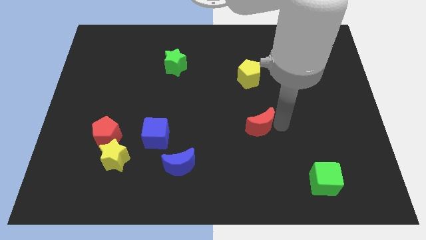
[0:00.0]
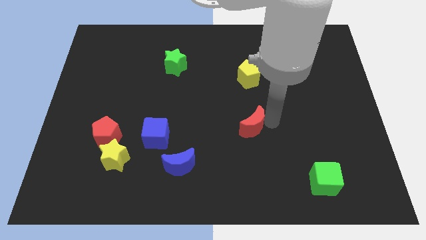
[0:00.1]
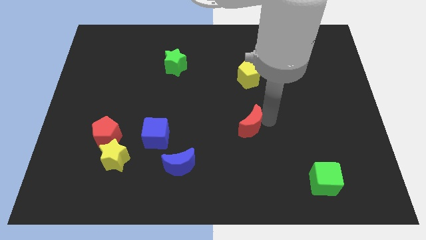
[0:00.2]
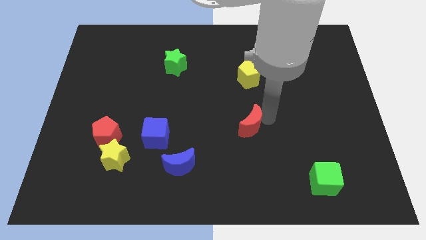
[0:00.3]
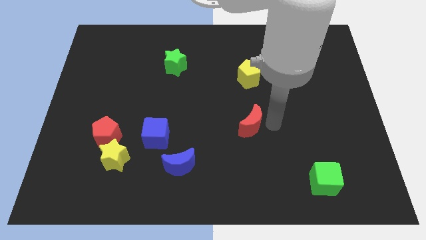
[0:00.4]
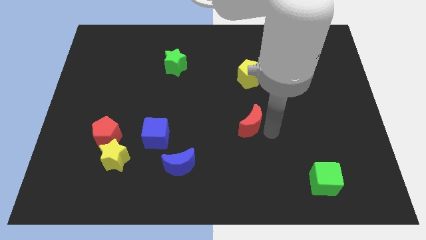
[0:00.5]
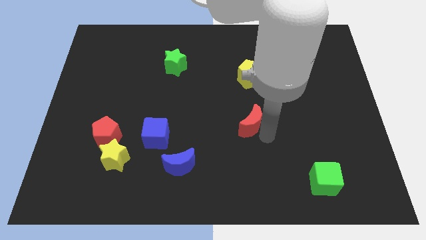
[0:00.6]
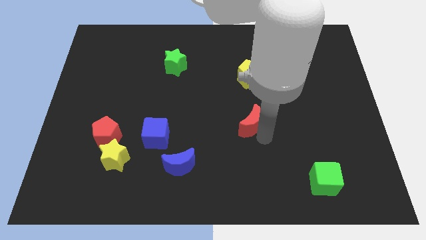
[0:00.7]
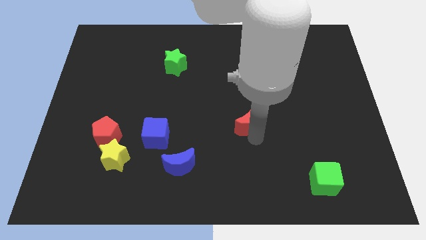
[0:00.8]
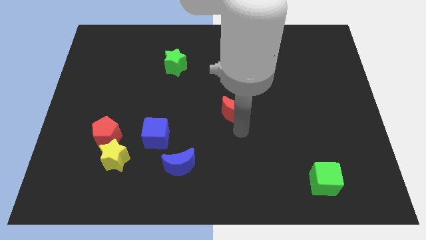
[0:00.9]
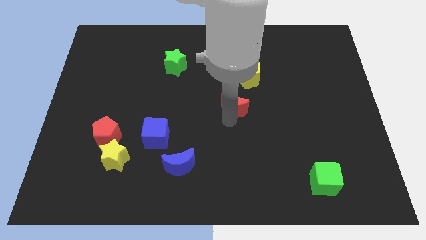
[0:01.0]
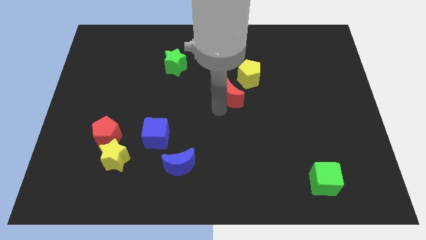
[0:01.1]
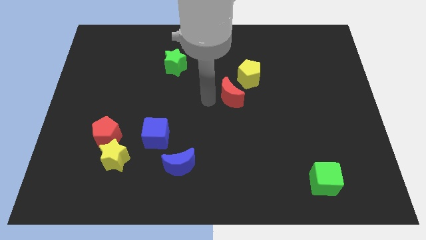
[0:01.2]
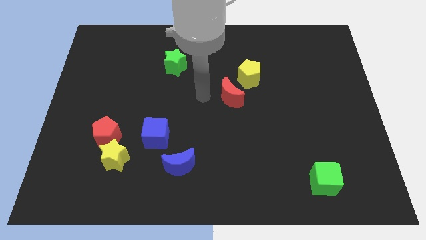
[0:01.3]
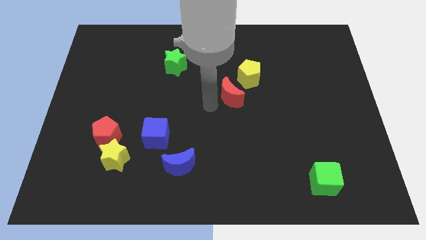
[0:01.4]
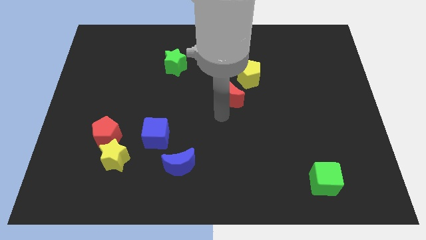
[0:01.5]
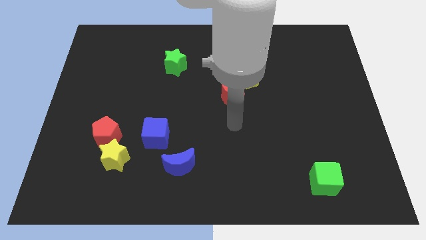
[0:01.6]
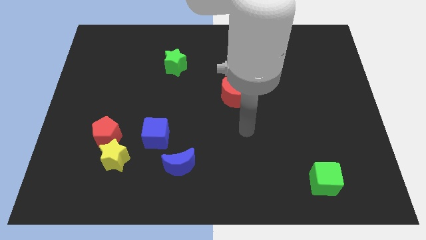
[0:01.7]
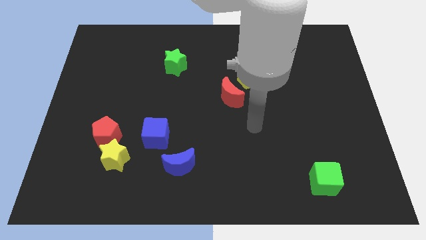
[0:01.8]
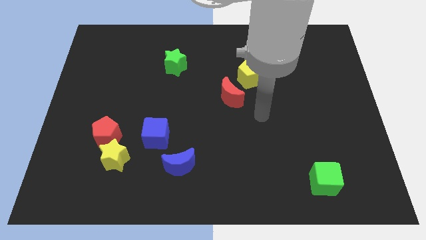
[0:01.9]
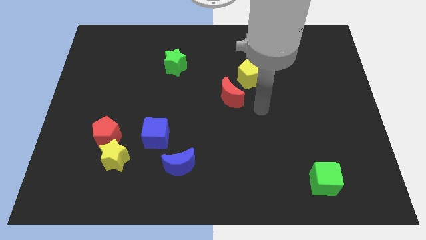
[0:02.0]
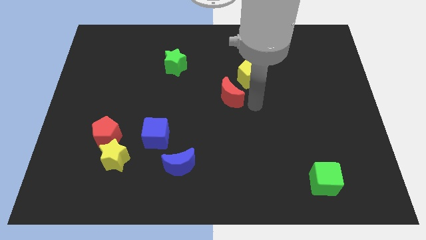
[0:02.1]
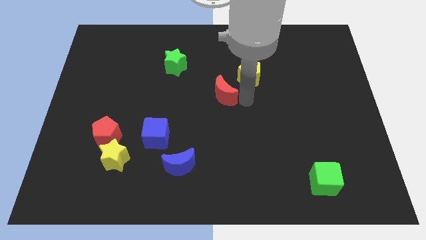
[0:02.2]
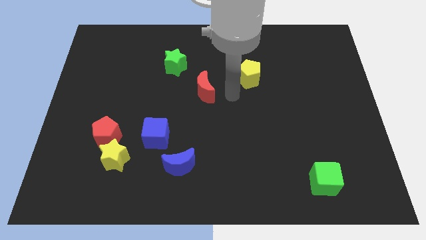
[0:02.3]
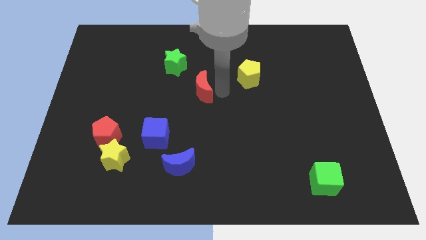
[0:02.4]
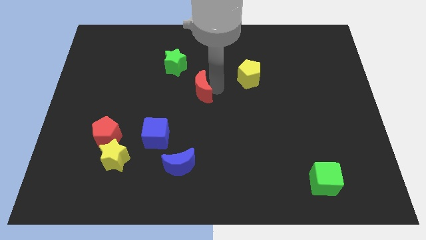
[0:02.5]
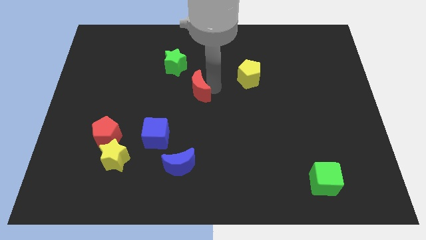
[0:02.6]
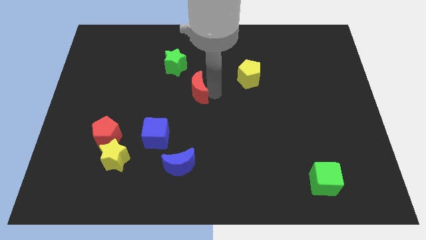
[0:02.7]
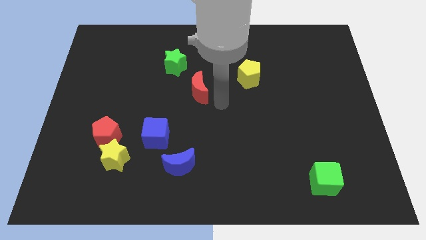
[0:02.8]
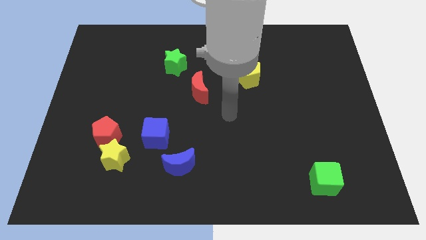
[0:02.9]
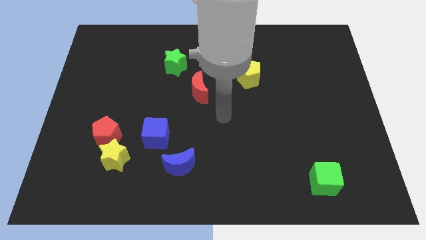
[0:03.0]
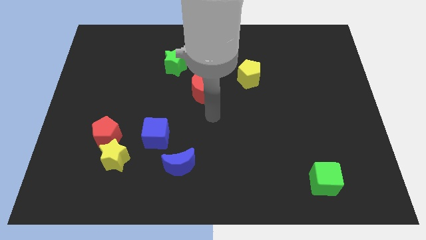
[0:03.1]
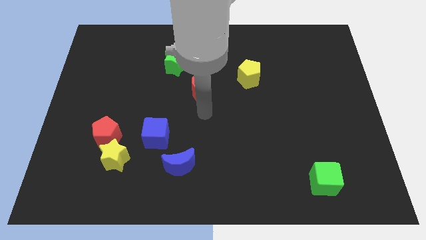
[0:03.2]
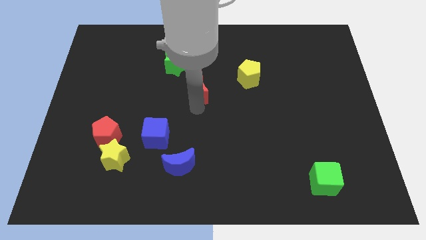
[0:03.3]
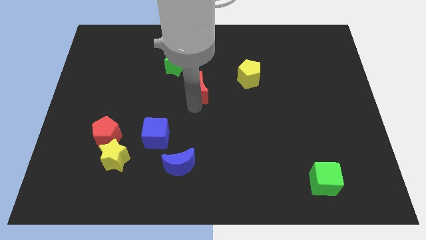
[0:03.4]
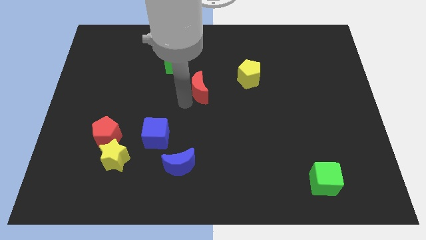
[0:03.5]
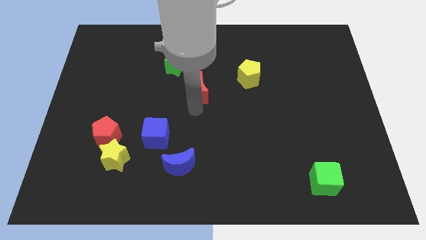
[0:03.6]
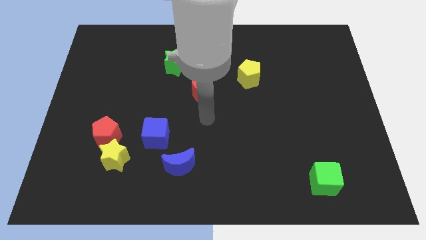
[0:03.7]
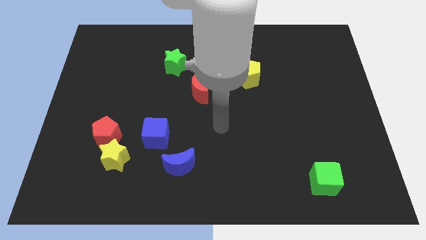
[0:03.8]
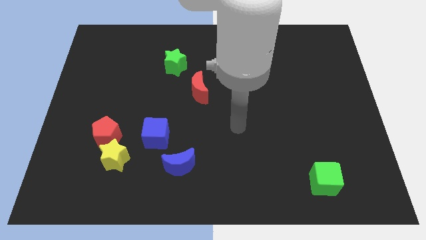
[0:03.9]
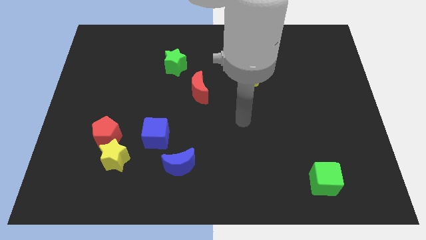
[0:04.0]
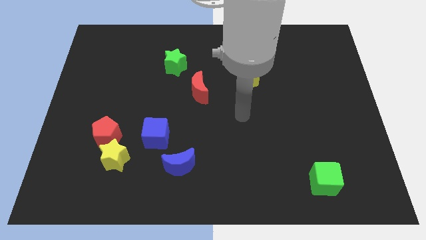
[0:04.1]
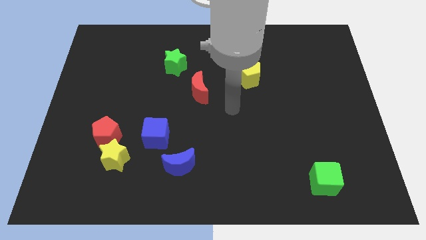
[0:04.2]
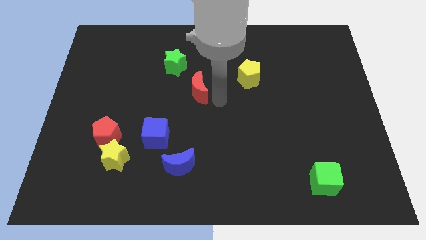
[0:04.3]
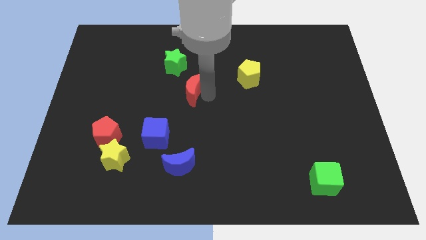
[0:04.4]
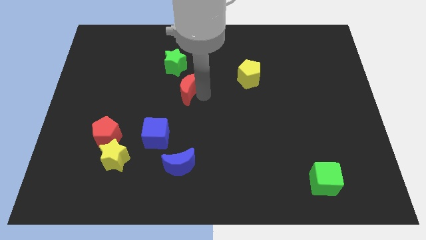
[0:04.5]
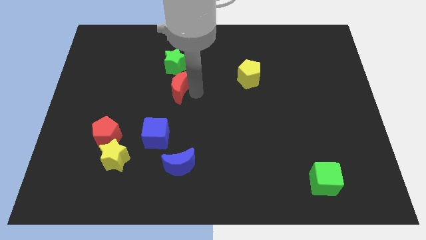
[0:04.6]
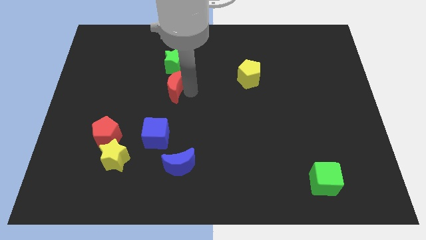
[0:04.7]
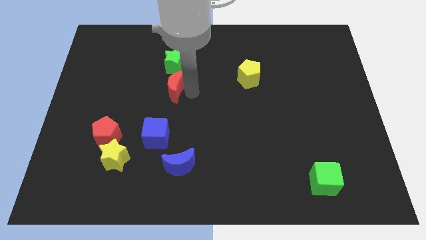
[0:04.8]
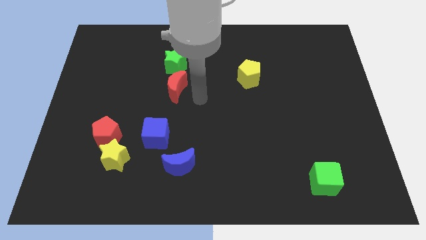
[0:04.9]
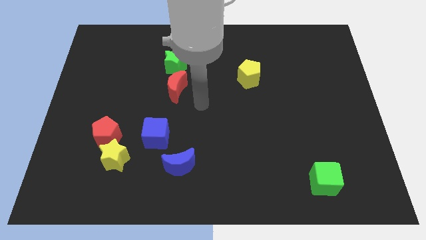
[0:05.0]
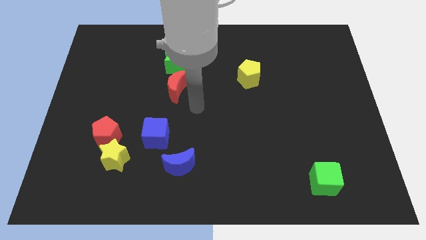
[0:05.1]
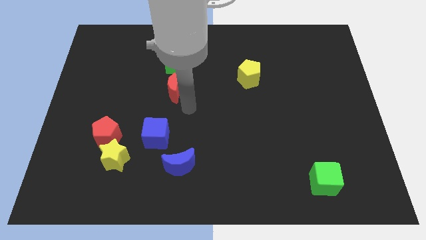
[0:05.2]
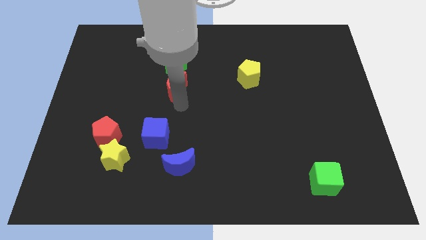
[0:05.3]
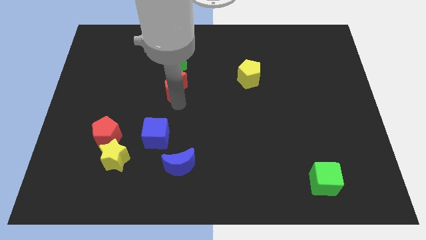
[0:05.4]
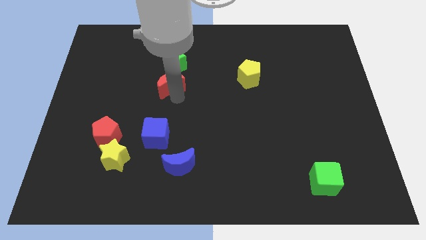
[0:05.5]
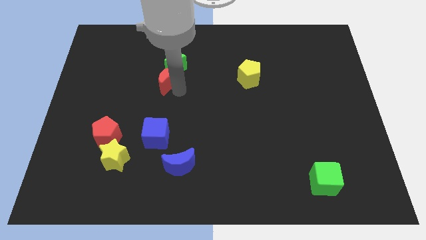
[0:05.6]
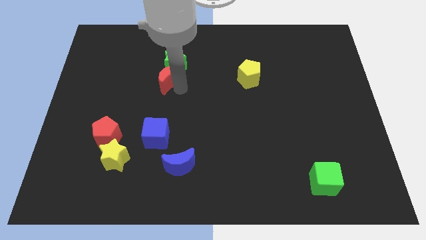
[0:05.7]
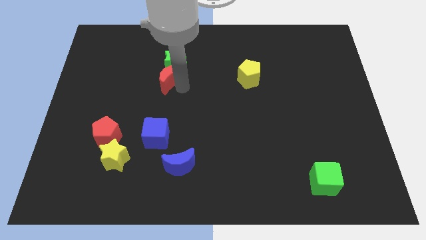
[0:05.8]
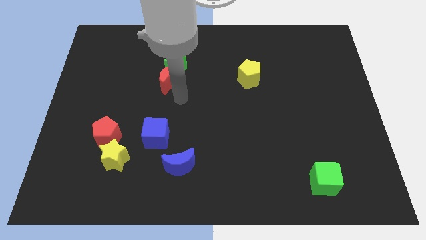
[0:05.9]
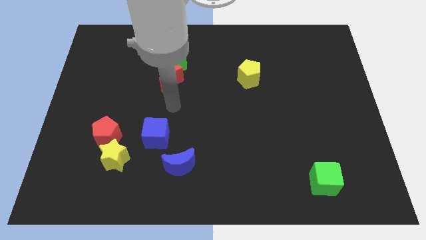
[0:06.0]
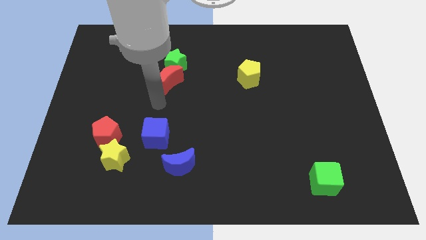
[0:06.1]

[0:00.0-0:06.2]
push the red crescent to the bottom of the green star

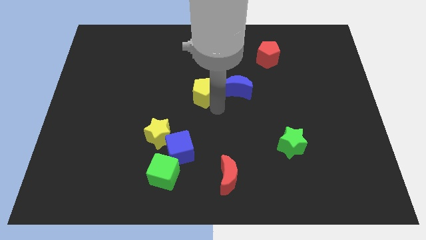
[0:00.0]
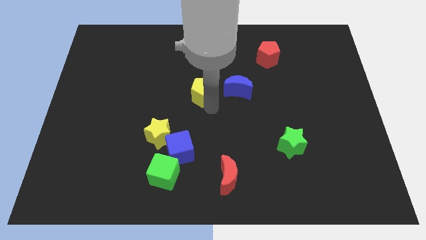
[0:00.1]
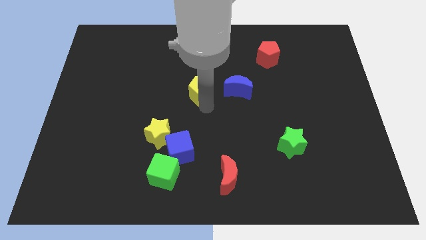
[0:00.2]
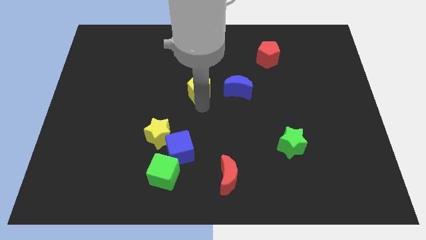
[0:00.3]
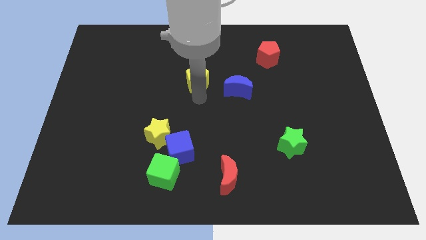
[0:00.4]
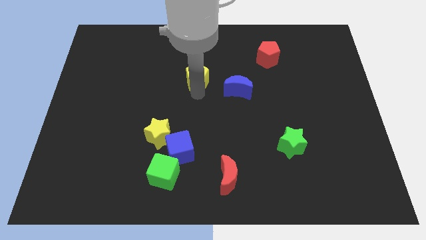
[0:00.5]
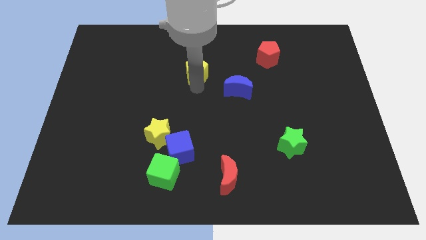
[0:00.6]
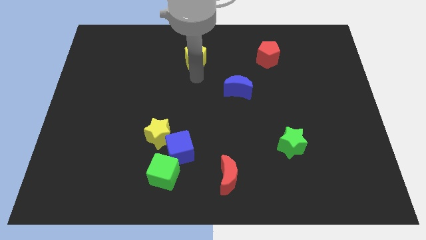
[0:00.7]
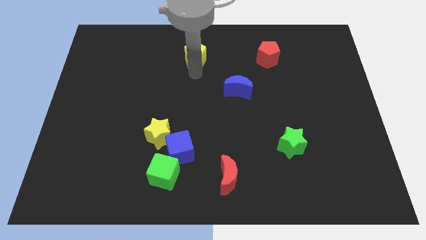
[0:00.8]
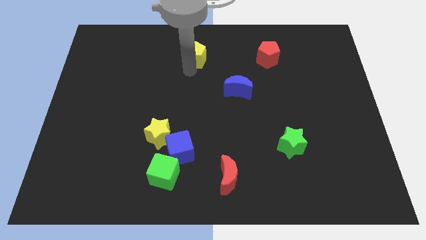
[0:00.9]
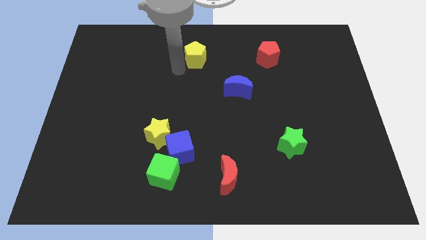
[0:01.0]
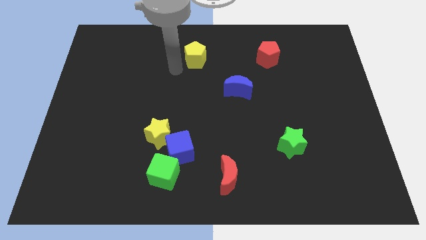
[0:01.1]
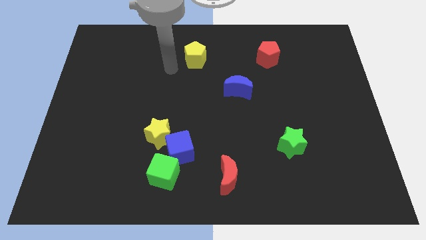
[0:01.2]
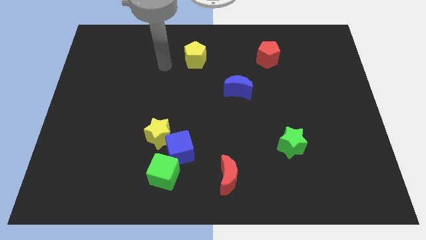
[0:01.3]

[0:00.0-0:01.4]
push the yellow pentagon upward

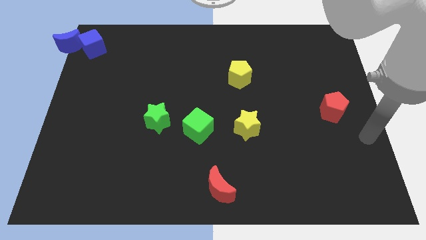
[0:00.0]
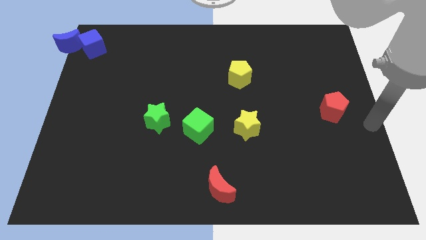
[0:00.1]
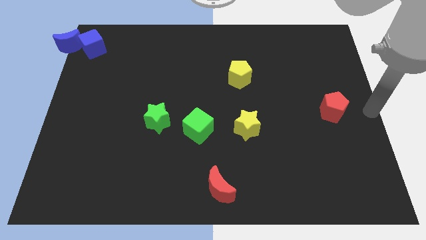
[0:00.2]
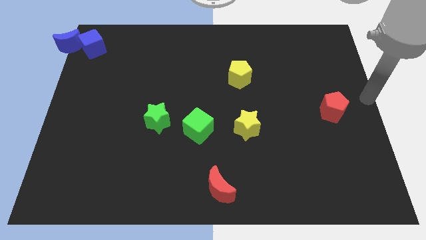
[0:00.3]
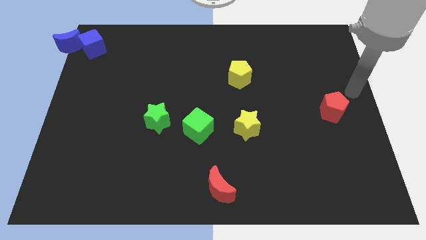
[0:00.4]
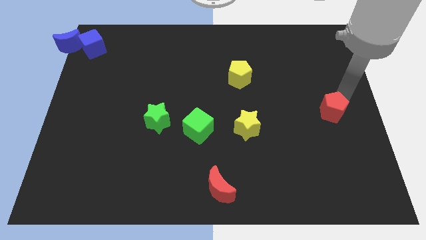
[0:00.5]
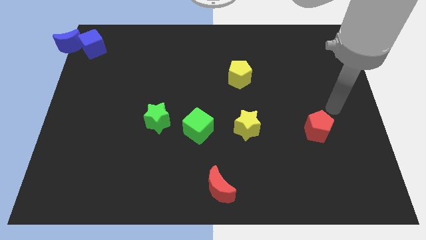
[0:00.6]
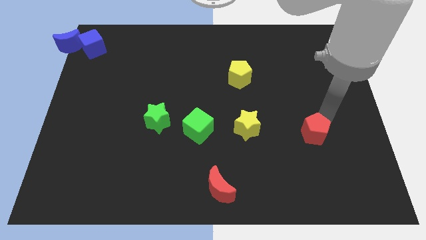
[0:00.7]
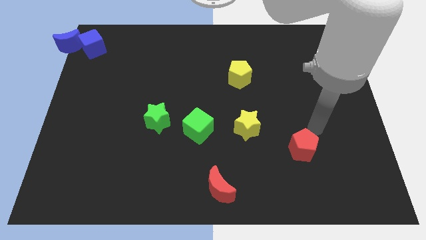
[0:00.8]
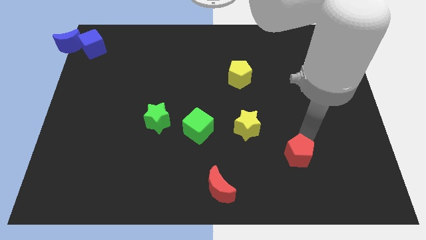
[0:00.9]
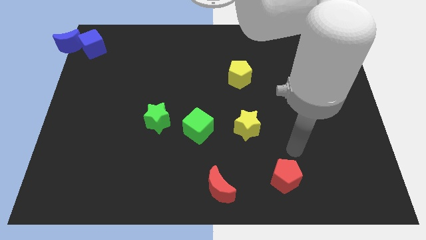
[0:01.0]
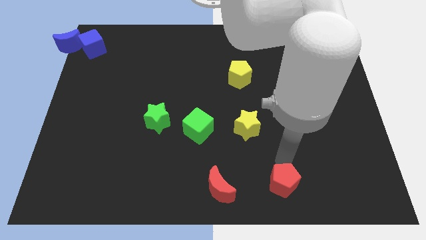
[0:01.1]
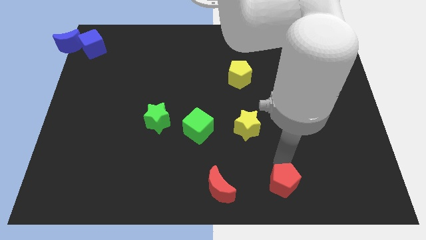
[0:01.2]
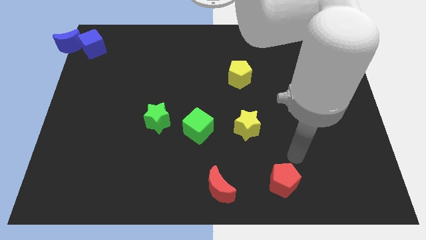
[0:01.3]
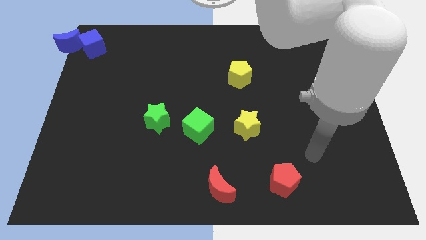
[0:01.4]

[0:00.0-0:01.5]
place the red pentagon at the right side of the red moon
